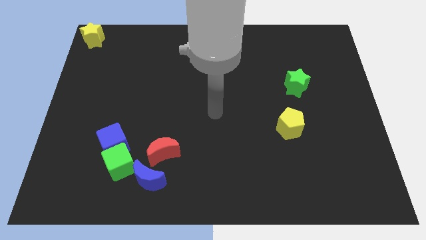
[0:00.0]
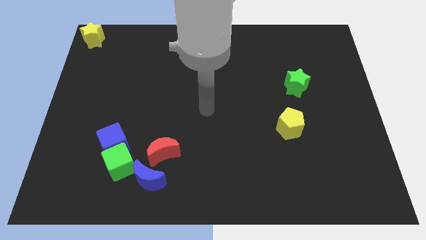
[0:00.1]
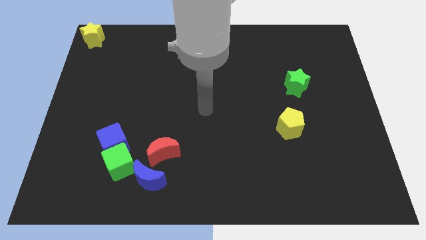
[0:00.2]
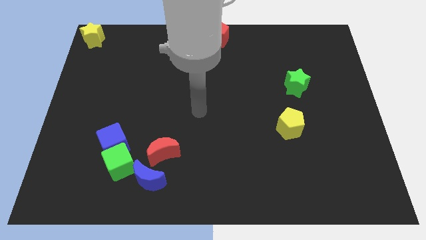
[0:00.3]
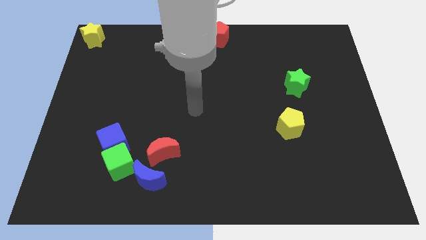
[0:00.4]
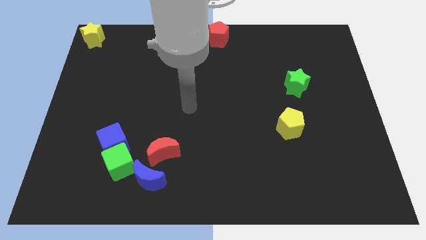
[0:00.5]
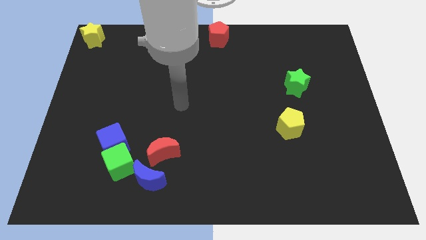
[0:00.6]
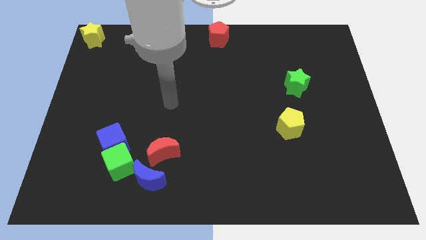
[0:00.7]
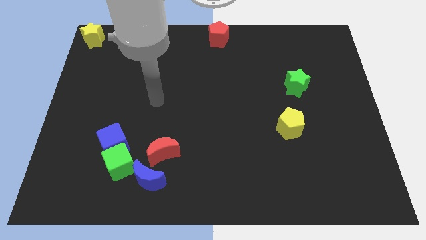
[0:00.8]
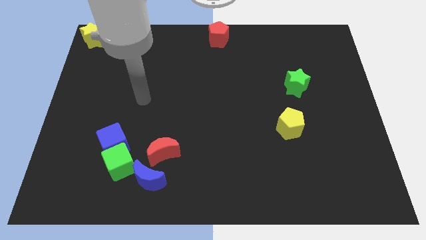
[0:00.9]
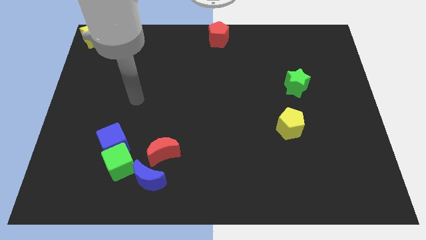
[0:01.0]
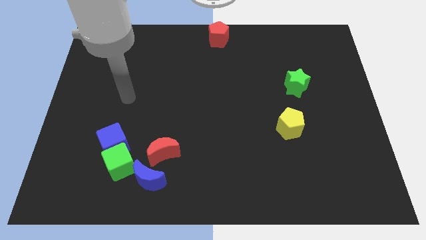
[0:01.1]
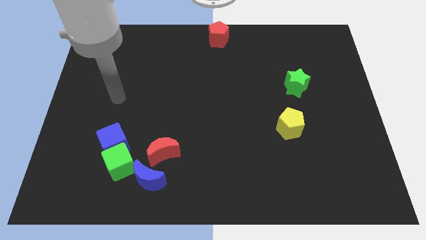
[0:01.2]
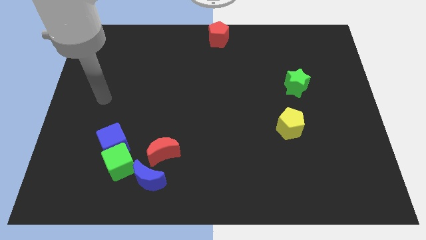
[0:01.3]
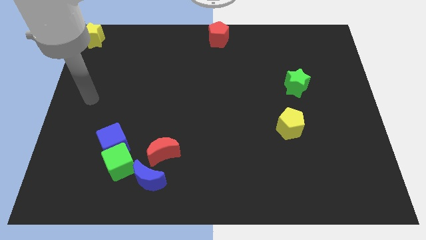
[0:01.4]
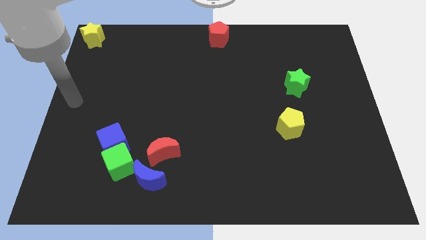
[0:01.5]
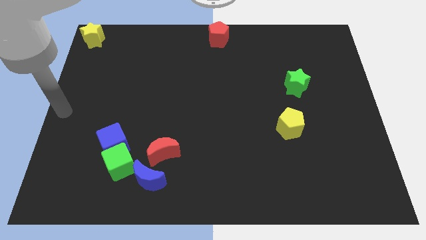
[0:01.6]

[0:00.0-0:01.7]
place your hand at left center of the board

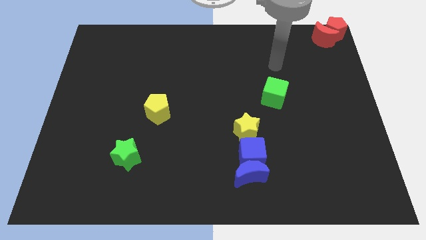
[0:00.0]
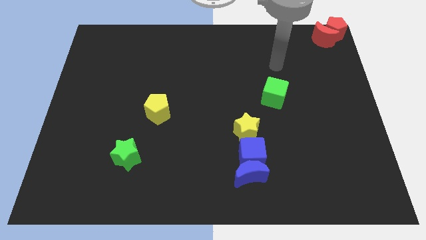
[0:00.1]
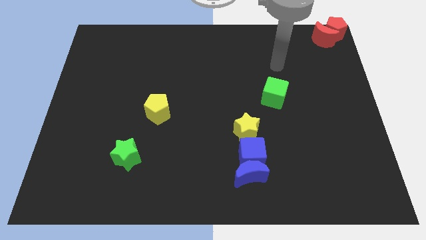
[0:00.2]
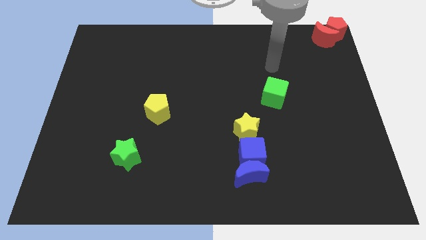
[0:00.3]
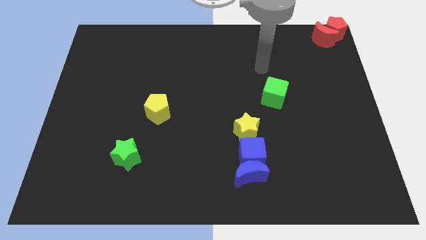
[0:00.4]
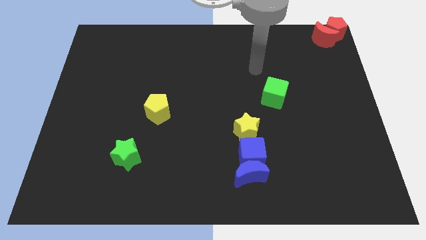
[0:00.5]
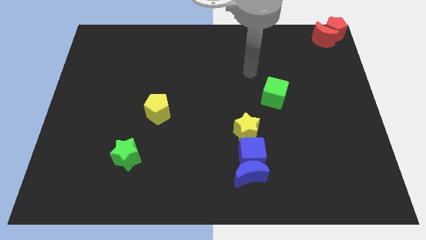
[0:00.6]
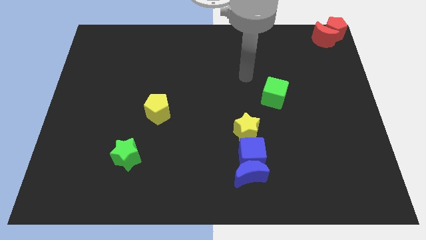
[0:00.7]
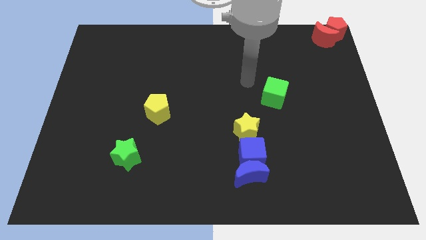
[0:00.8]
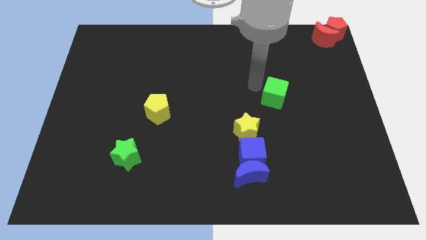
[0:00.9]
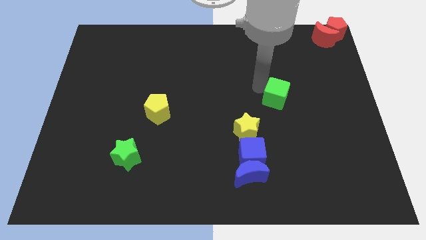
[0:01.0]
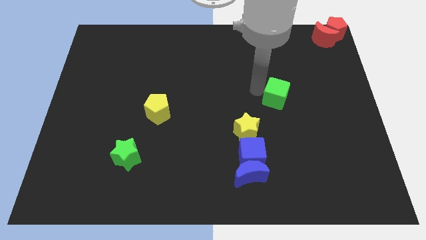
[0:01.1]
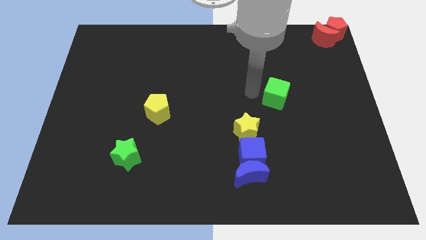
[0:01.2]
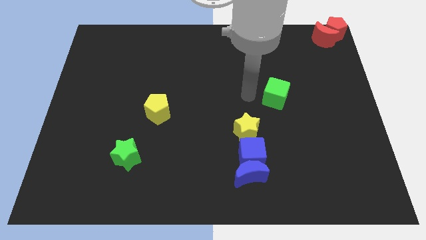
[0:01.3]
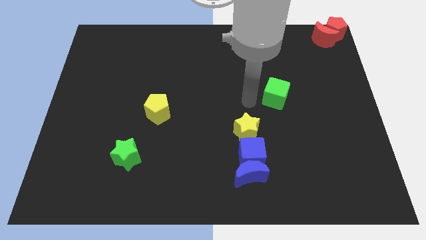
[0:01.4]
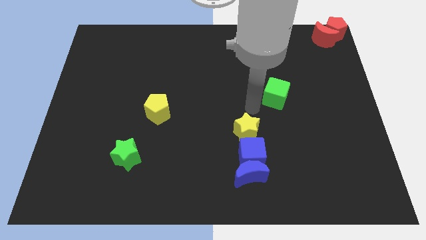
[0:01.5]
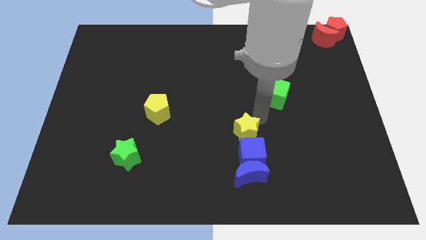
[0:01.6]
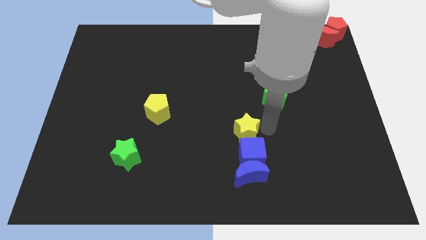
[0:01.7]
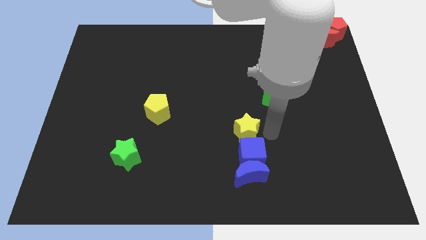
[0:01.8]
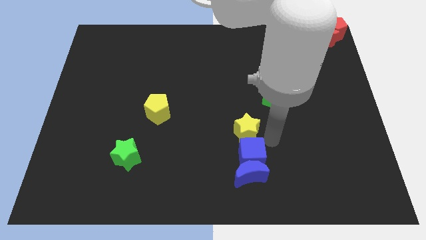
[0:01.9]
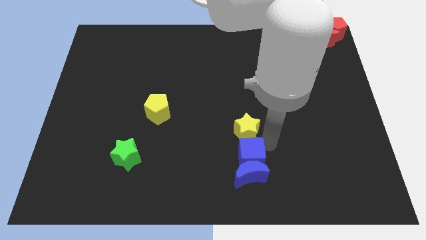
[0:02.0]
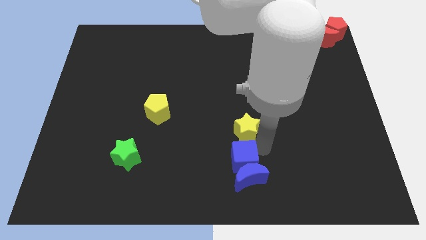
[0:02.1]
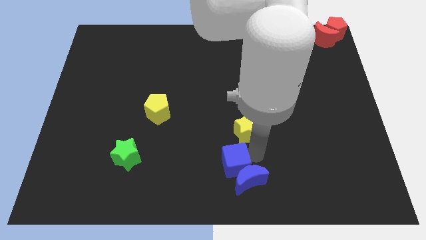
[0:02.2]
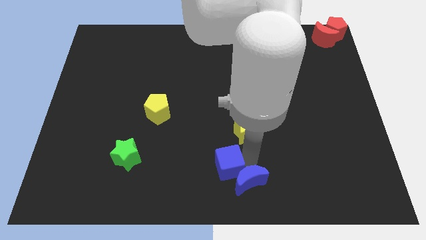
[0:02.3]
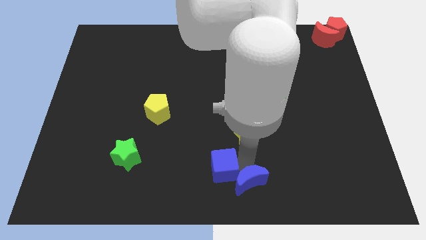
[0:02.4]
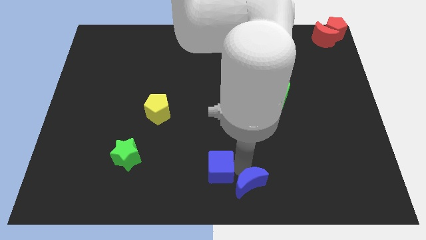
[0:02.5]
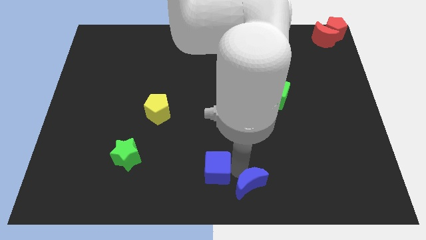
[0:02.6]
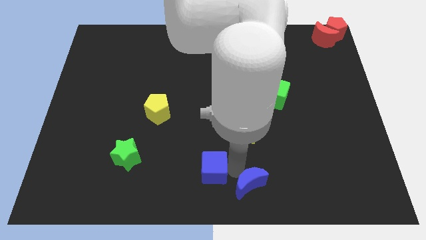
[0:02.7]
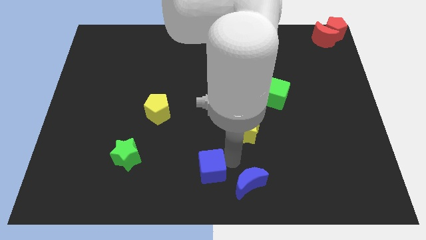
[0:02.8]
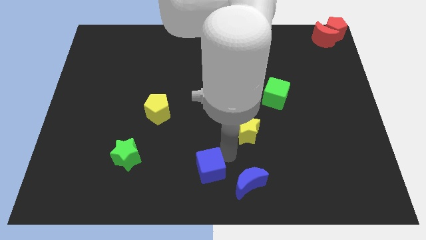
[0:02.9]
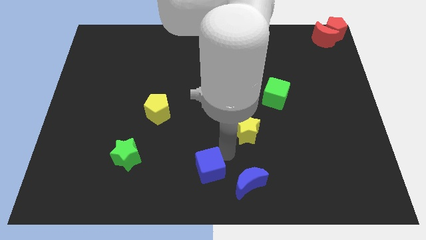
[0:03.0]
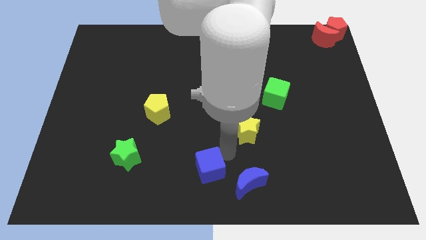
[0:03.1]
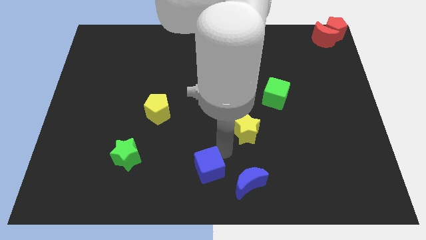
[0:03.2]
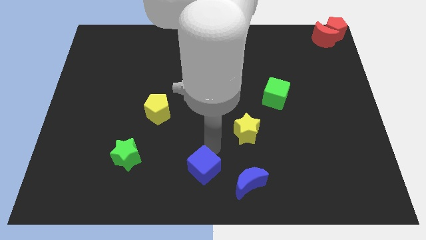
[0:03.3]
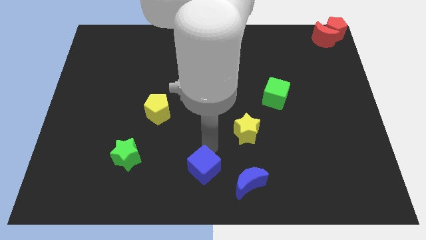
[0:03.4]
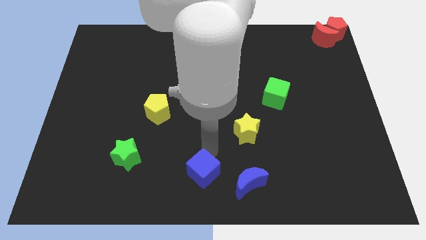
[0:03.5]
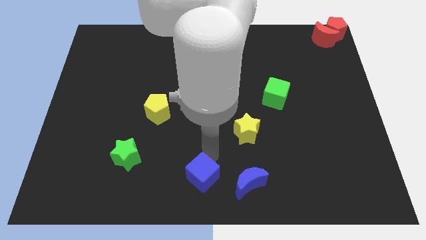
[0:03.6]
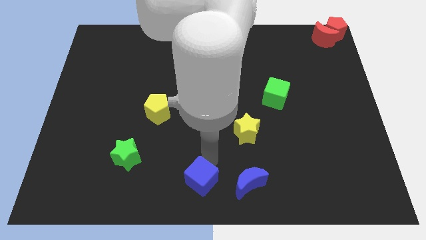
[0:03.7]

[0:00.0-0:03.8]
separate the blue cube and the blue moon

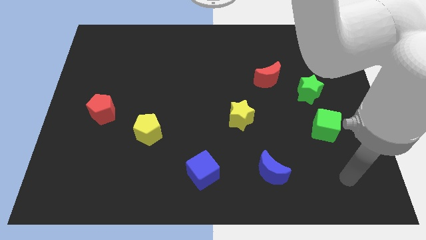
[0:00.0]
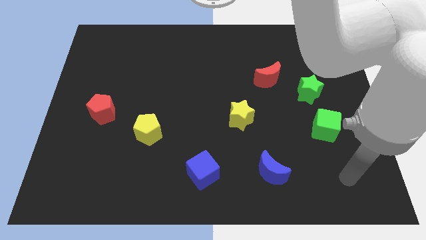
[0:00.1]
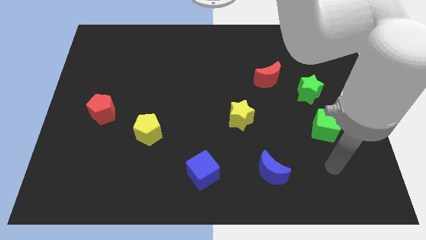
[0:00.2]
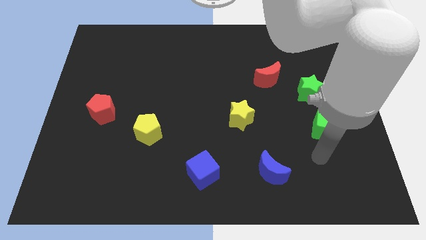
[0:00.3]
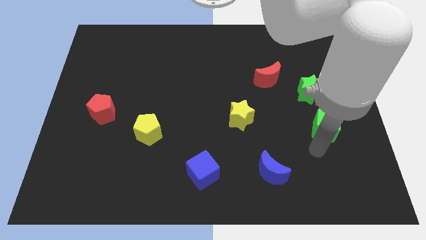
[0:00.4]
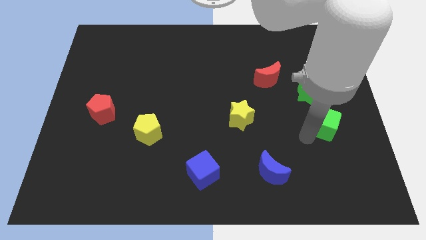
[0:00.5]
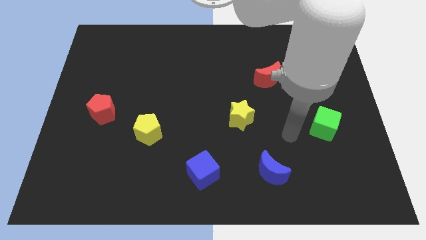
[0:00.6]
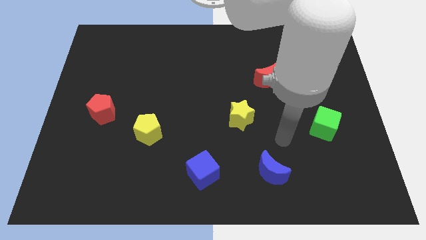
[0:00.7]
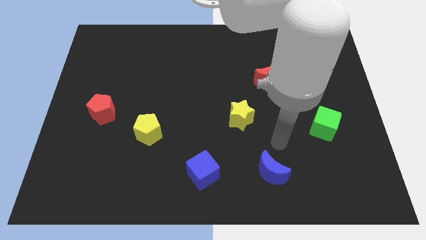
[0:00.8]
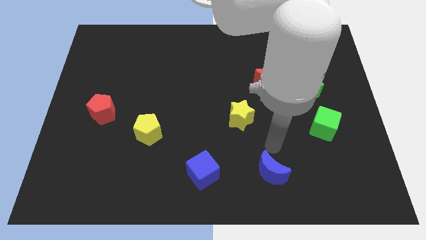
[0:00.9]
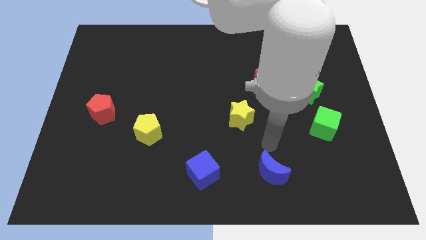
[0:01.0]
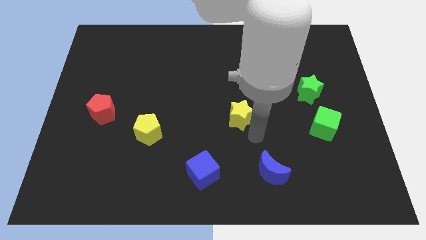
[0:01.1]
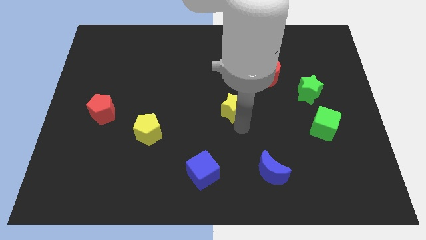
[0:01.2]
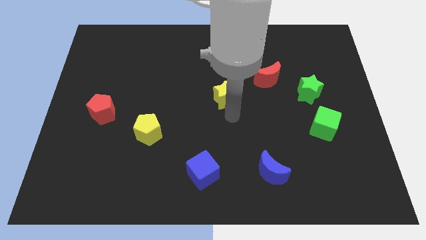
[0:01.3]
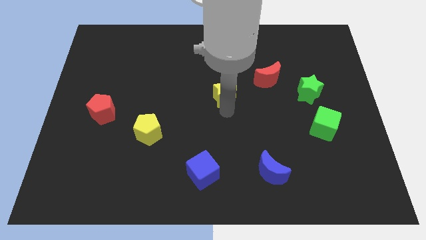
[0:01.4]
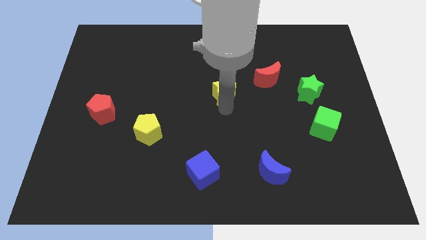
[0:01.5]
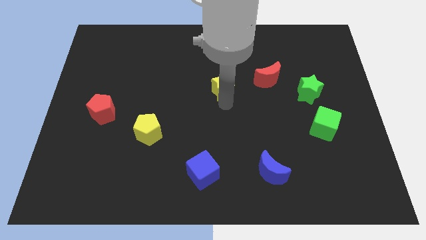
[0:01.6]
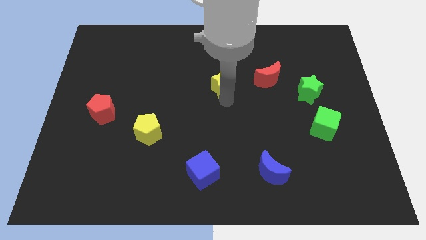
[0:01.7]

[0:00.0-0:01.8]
put the yellow star to the left of the red crescent

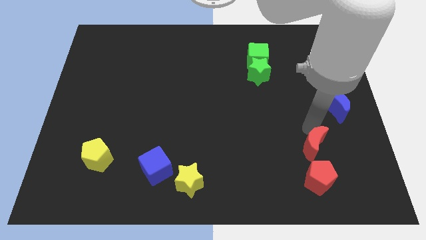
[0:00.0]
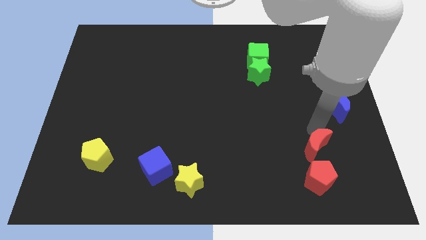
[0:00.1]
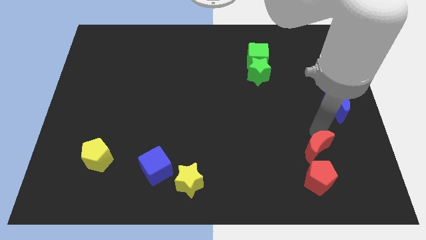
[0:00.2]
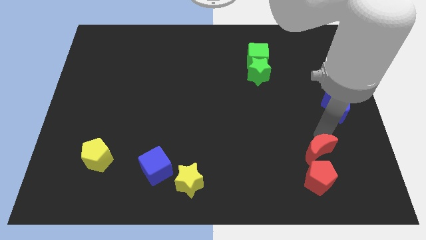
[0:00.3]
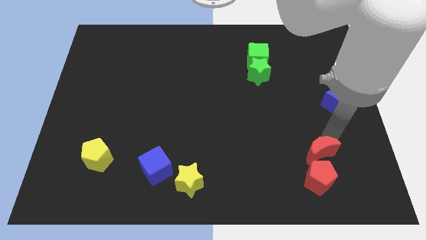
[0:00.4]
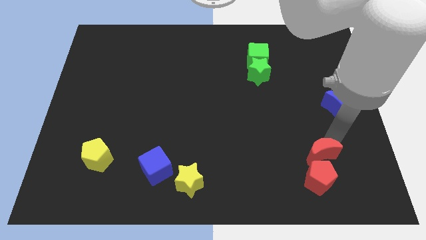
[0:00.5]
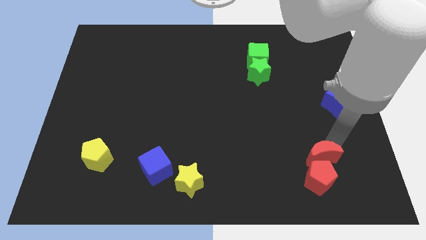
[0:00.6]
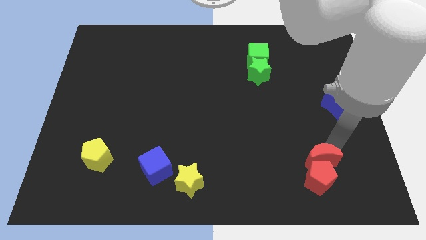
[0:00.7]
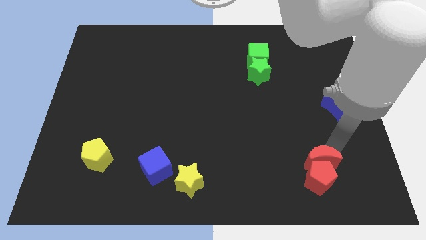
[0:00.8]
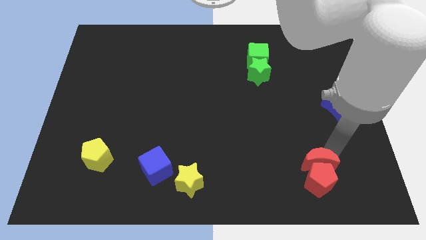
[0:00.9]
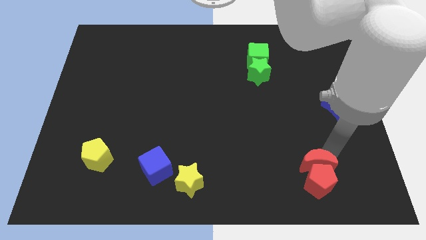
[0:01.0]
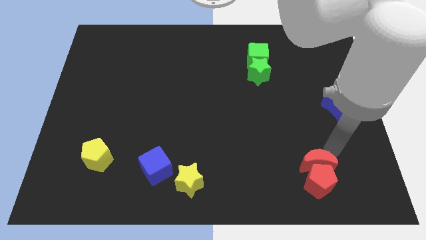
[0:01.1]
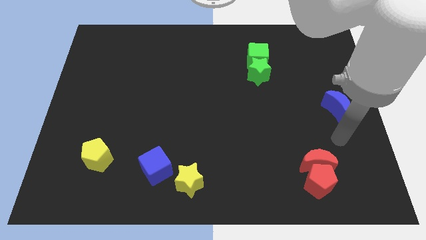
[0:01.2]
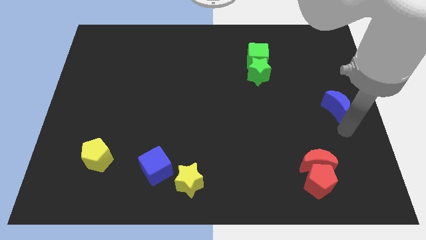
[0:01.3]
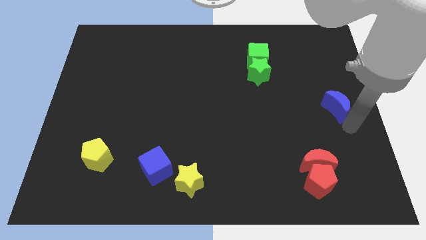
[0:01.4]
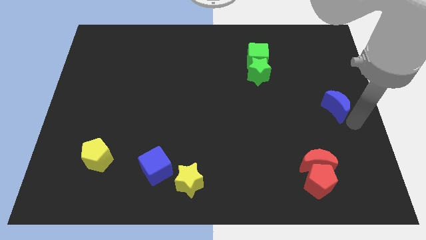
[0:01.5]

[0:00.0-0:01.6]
push the red moon into the red pentagon

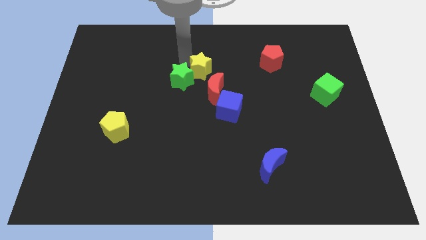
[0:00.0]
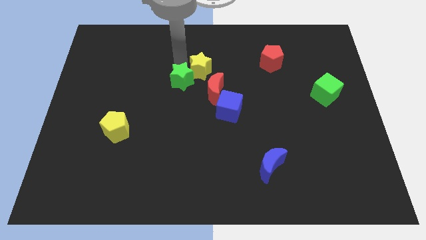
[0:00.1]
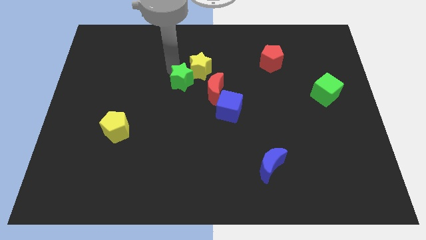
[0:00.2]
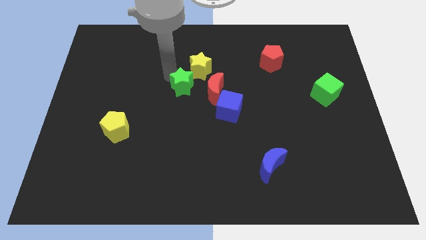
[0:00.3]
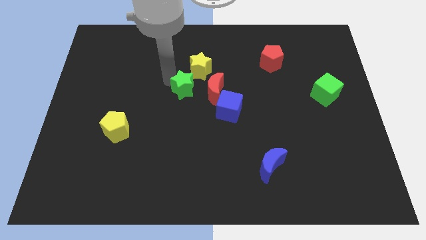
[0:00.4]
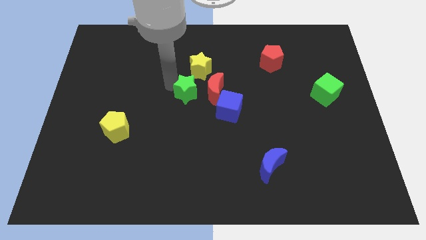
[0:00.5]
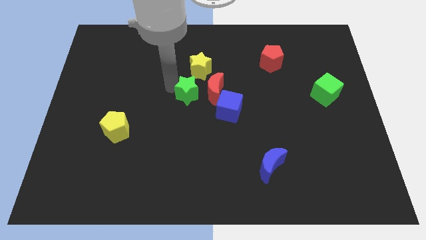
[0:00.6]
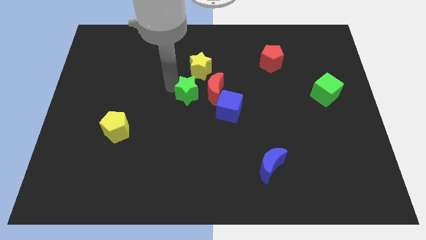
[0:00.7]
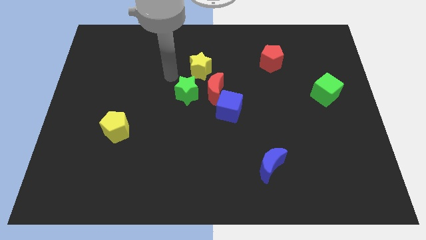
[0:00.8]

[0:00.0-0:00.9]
slightly push the green star towards the red crescent
